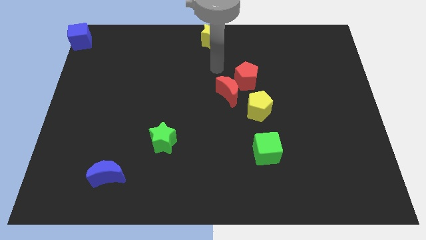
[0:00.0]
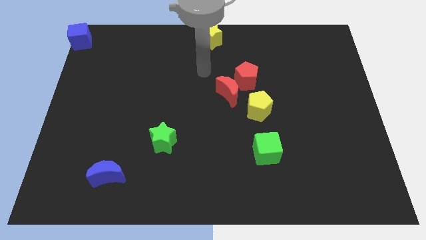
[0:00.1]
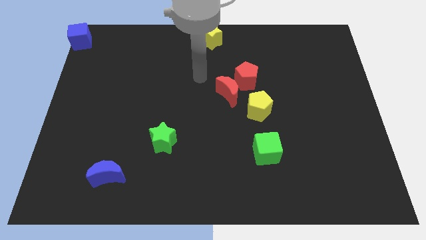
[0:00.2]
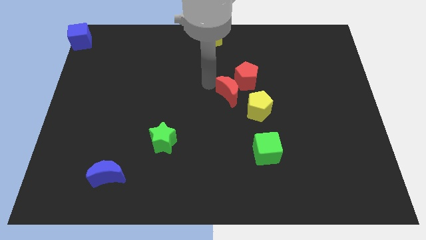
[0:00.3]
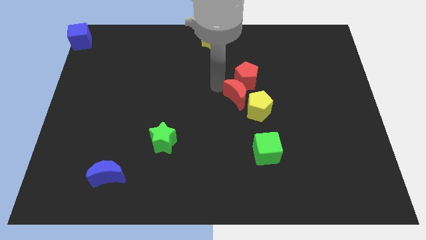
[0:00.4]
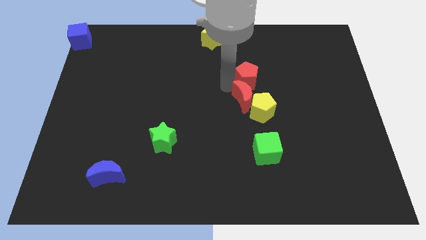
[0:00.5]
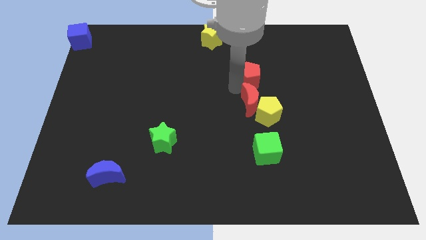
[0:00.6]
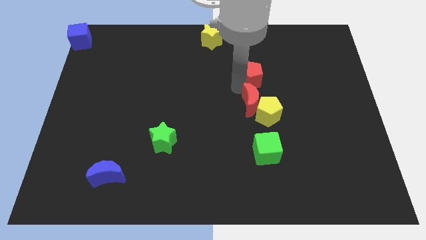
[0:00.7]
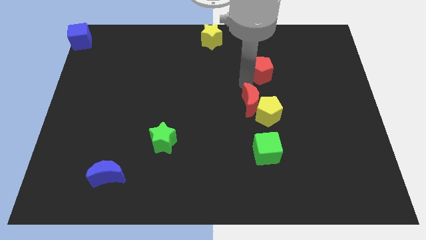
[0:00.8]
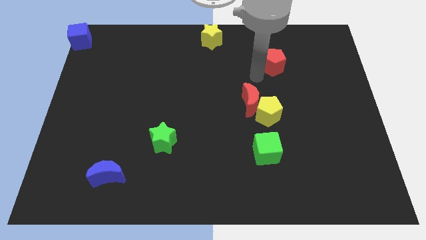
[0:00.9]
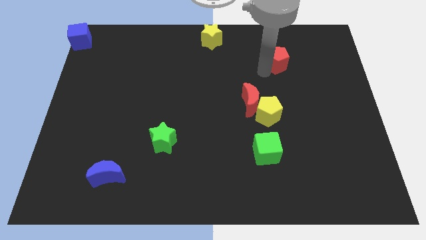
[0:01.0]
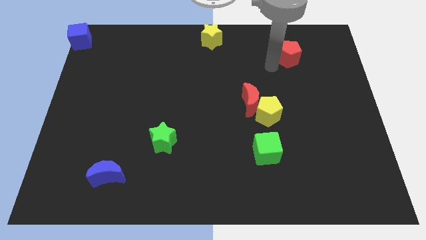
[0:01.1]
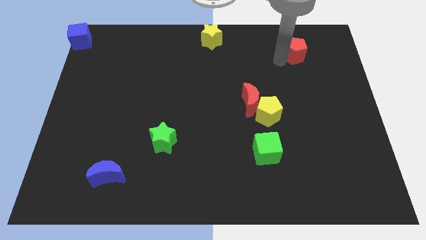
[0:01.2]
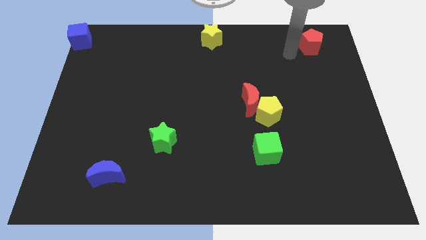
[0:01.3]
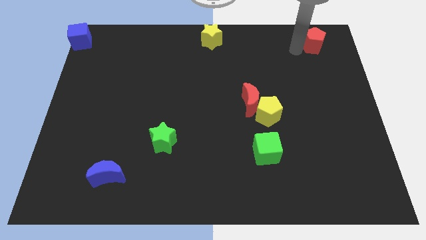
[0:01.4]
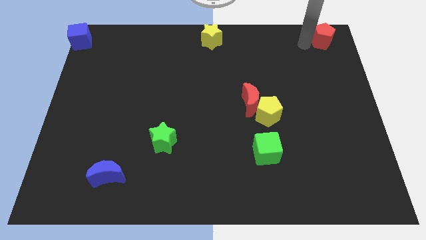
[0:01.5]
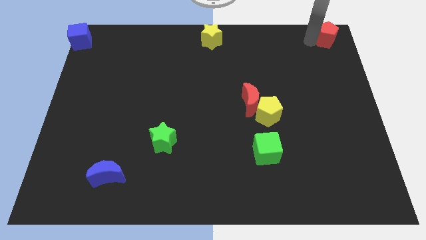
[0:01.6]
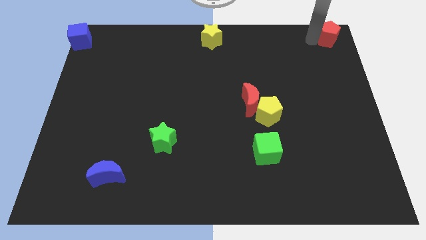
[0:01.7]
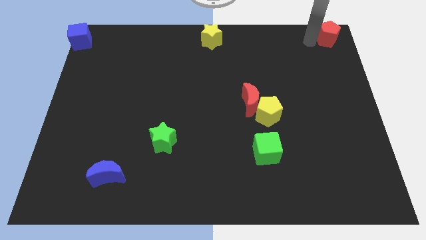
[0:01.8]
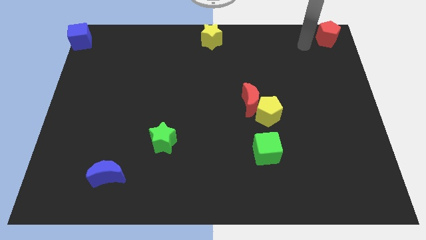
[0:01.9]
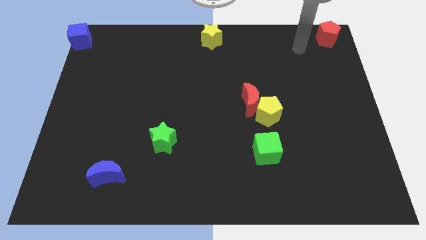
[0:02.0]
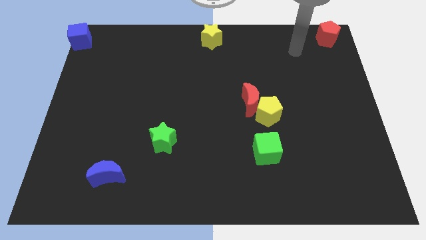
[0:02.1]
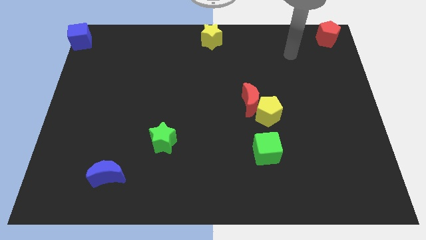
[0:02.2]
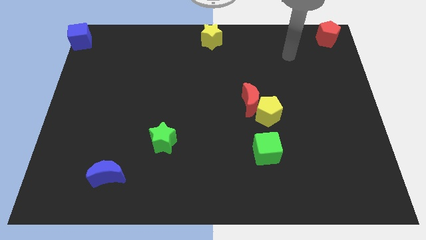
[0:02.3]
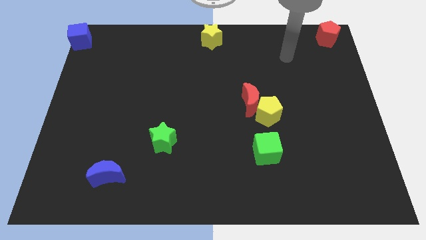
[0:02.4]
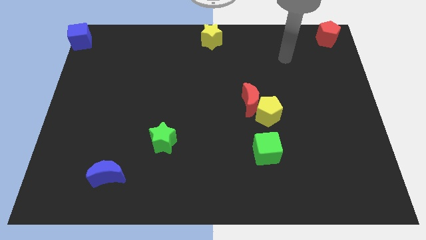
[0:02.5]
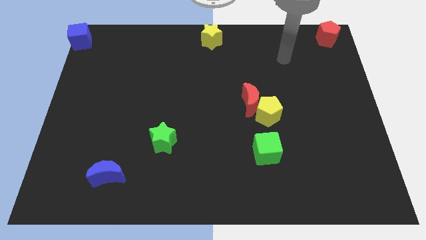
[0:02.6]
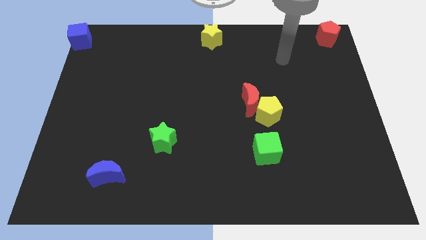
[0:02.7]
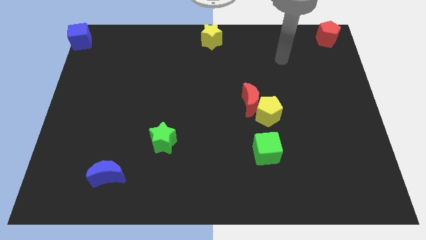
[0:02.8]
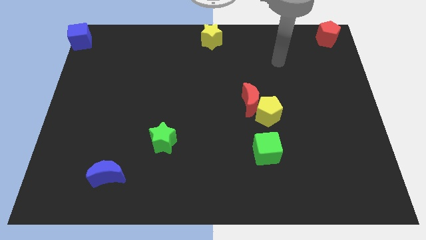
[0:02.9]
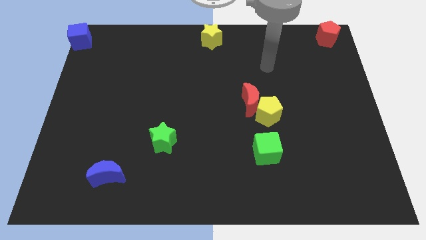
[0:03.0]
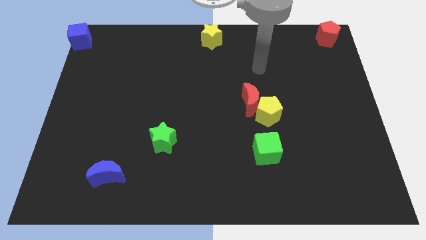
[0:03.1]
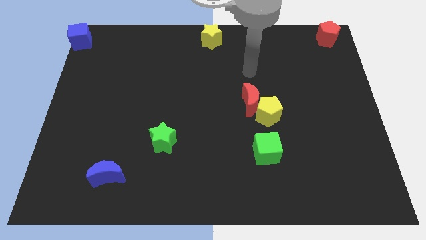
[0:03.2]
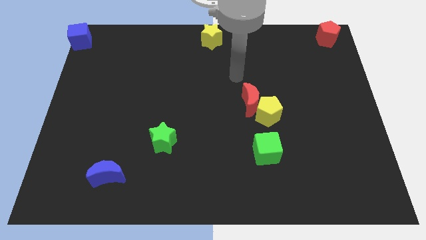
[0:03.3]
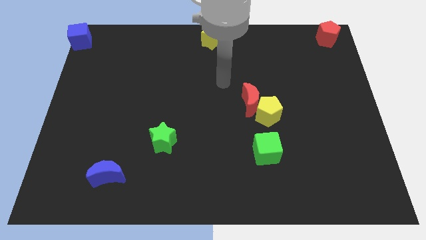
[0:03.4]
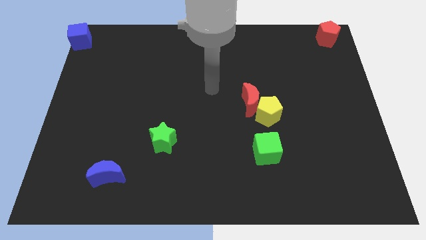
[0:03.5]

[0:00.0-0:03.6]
move red pentagon to the top right corner of the board

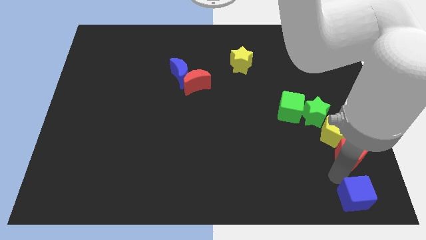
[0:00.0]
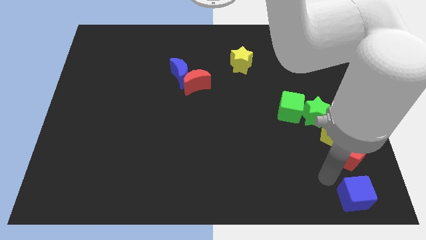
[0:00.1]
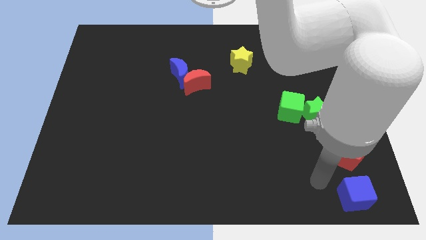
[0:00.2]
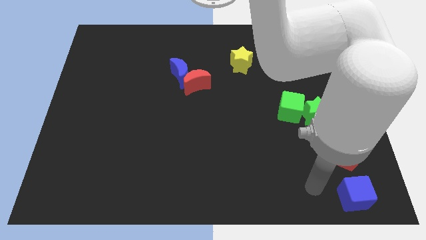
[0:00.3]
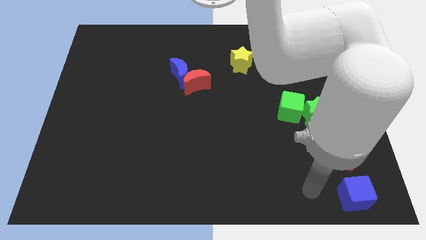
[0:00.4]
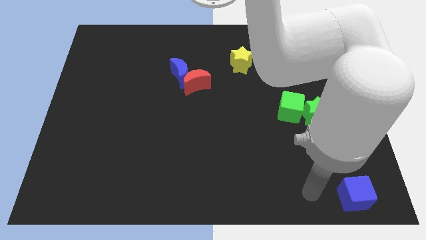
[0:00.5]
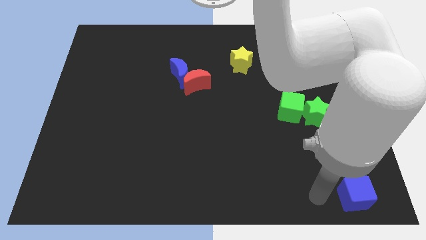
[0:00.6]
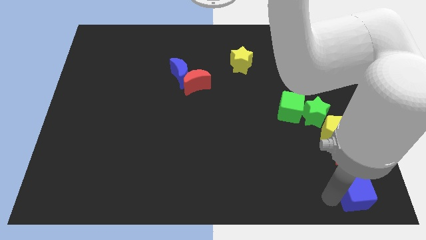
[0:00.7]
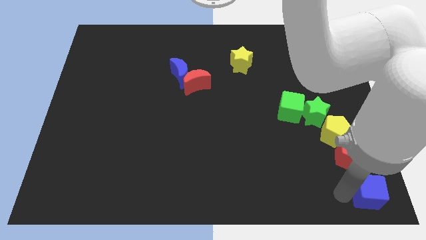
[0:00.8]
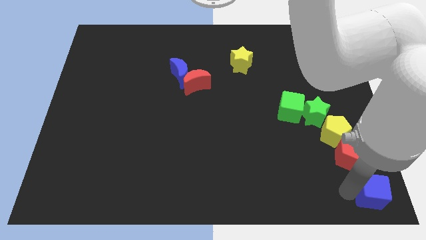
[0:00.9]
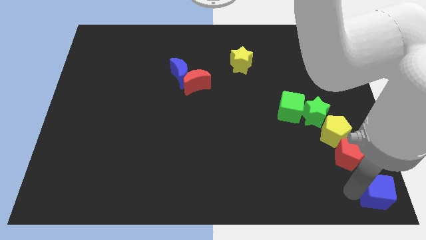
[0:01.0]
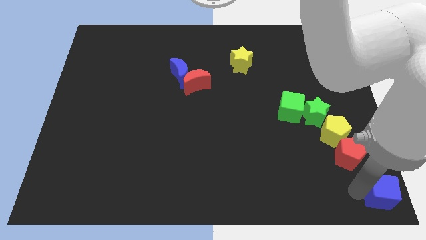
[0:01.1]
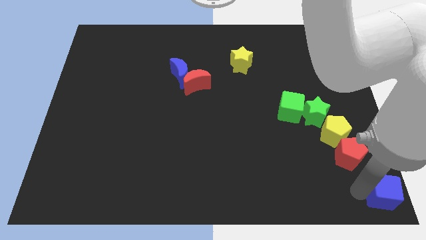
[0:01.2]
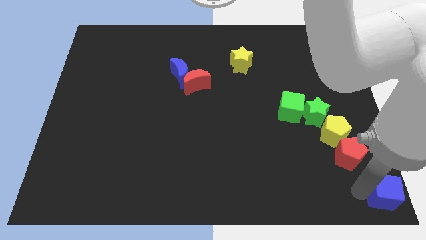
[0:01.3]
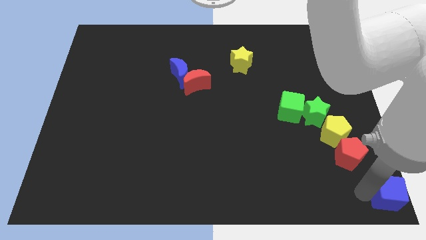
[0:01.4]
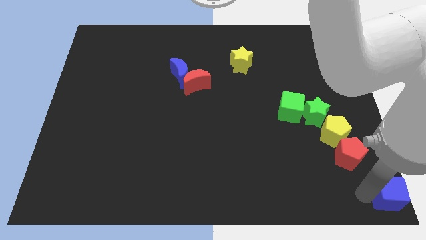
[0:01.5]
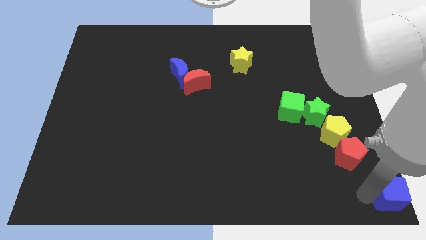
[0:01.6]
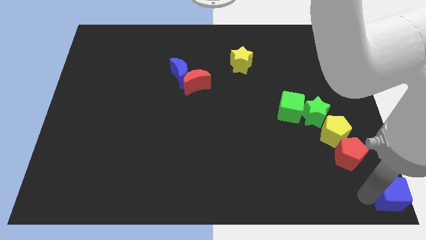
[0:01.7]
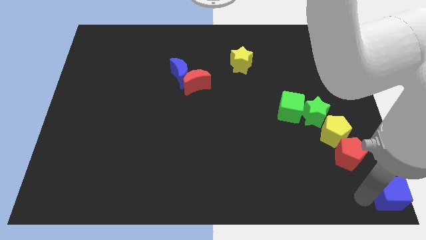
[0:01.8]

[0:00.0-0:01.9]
push the blue cube to the right bottom corner

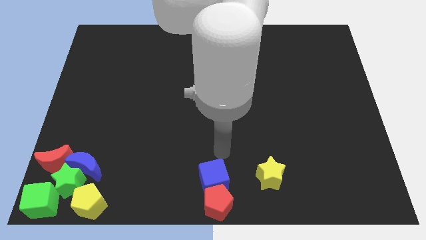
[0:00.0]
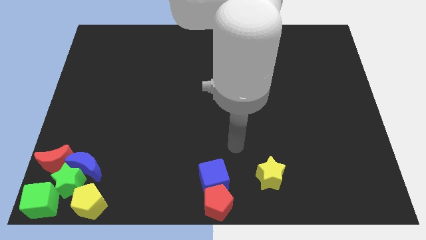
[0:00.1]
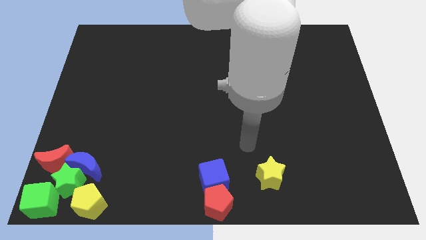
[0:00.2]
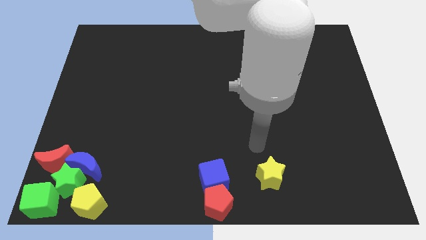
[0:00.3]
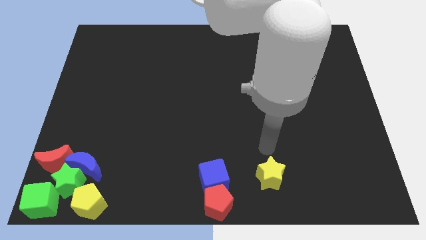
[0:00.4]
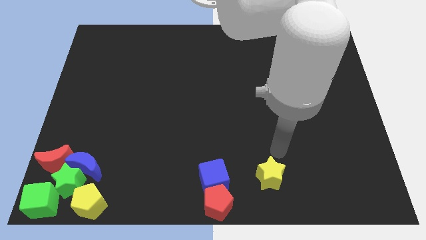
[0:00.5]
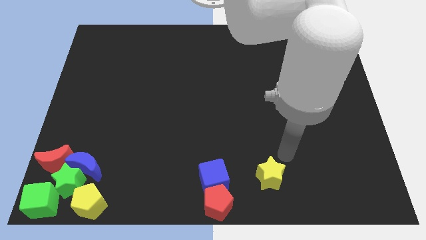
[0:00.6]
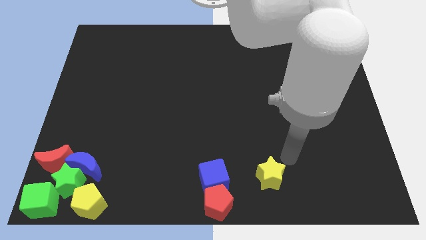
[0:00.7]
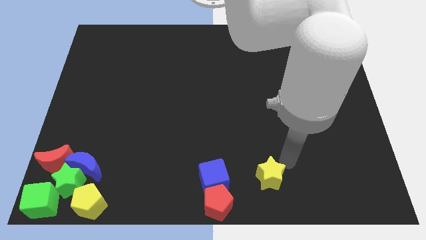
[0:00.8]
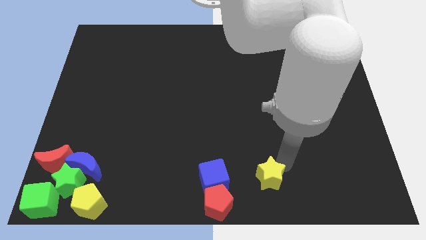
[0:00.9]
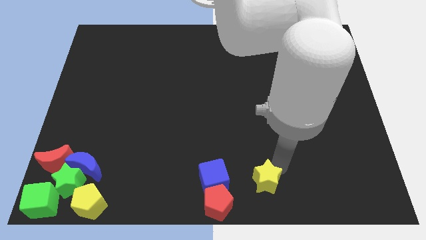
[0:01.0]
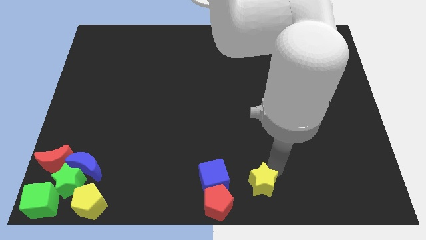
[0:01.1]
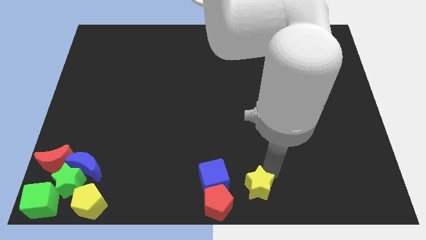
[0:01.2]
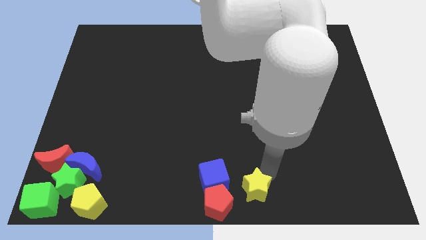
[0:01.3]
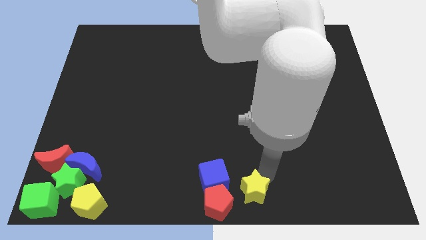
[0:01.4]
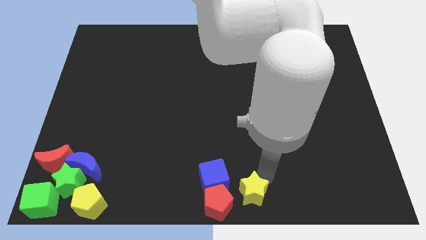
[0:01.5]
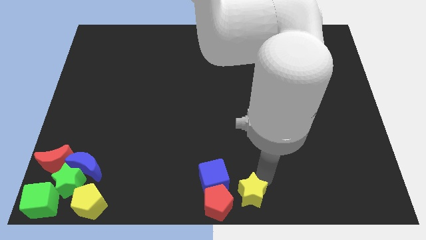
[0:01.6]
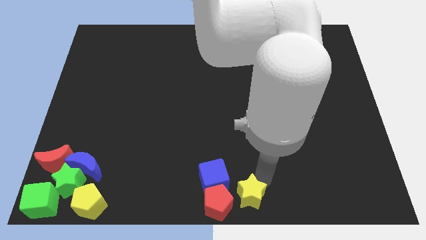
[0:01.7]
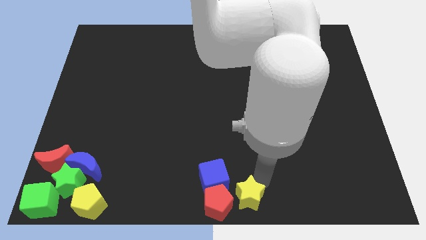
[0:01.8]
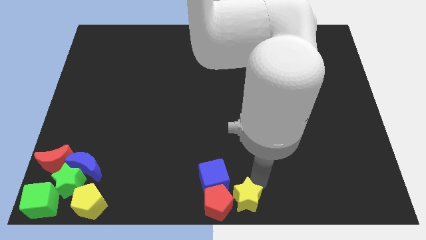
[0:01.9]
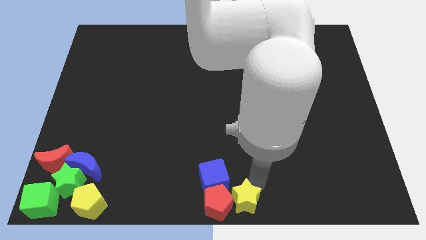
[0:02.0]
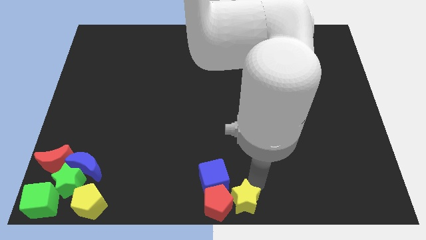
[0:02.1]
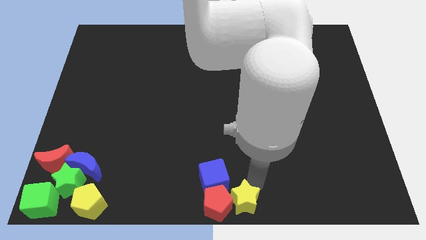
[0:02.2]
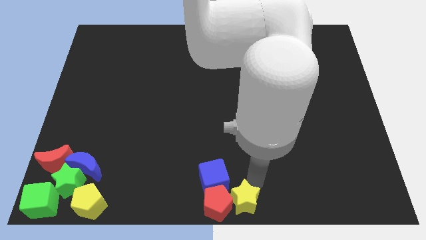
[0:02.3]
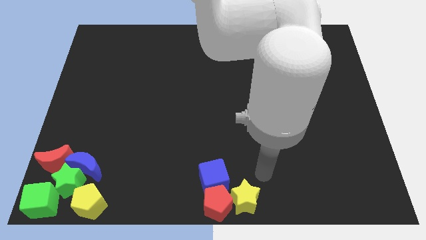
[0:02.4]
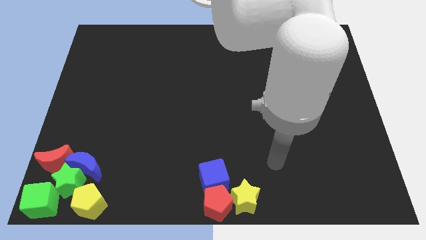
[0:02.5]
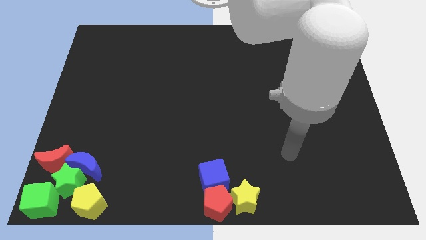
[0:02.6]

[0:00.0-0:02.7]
push the yellow star into red pentagon

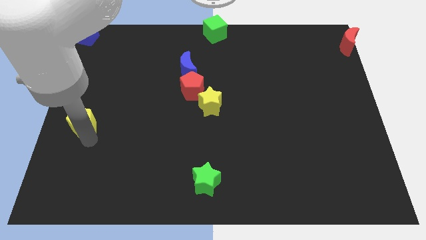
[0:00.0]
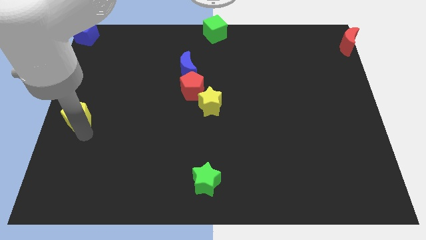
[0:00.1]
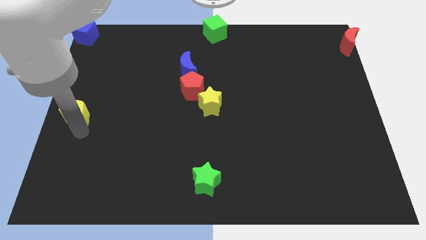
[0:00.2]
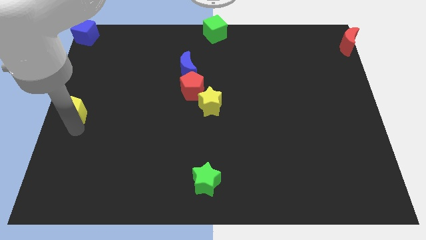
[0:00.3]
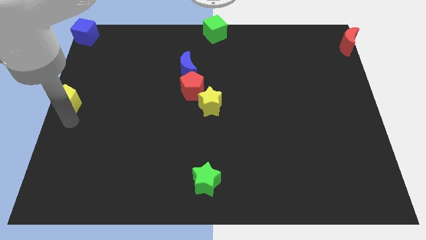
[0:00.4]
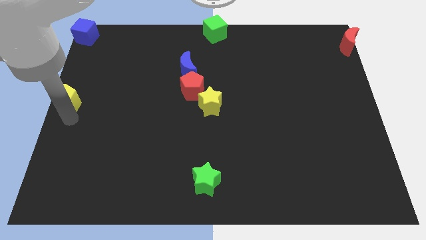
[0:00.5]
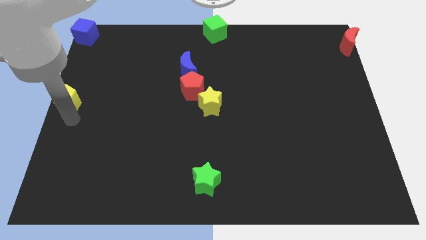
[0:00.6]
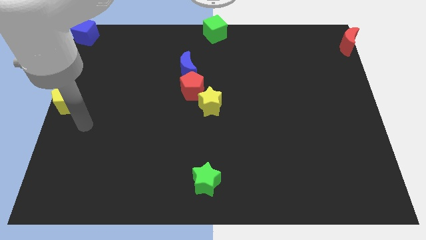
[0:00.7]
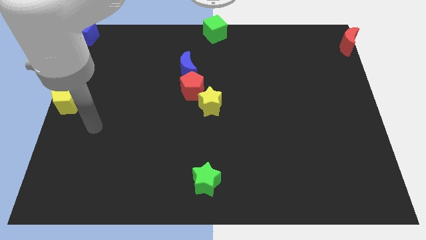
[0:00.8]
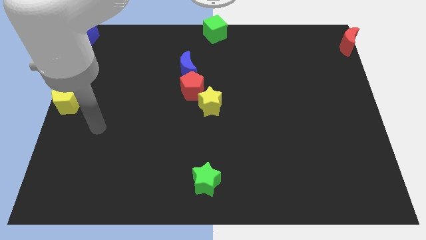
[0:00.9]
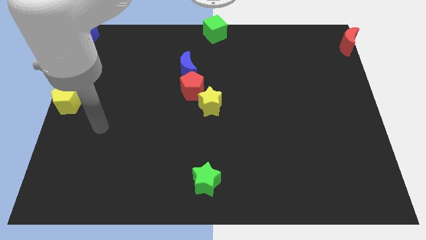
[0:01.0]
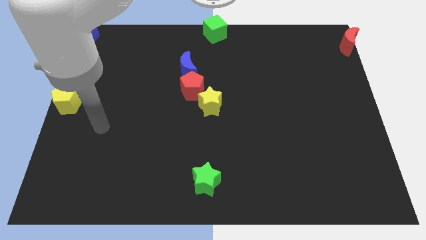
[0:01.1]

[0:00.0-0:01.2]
move yellow pentagon to the center left
